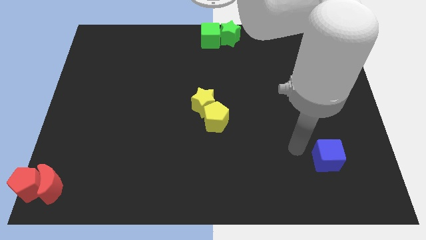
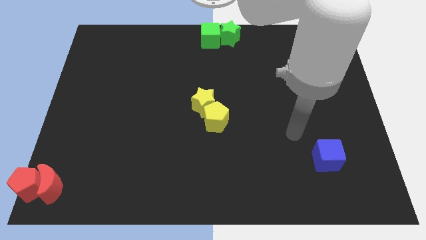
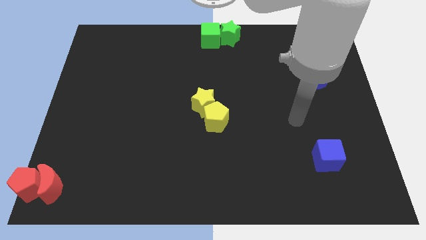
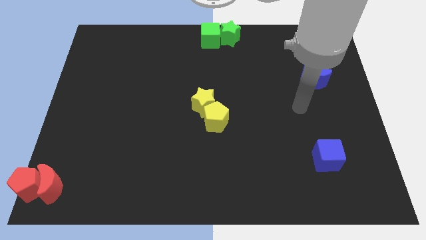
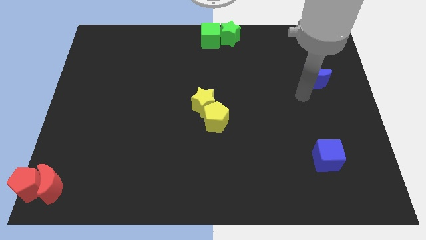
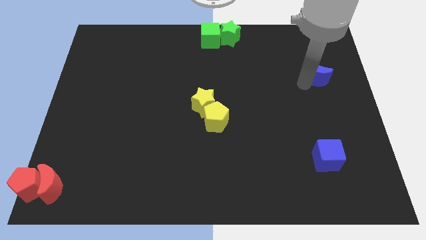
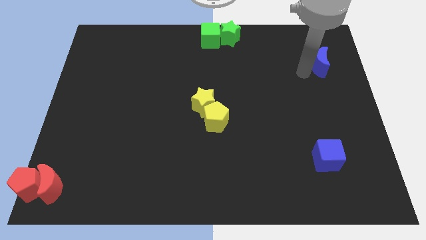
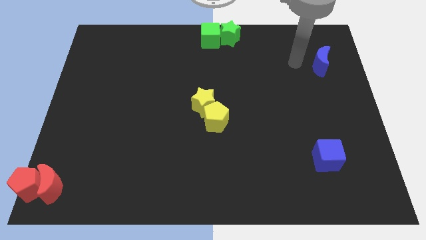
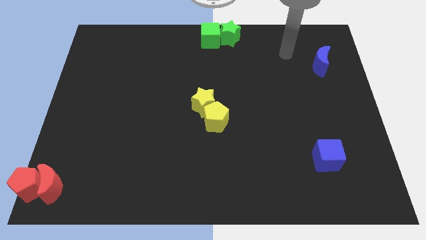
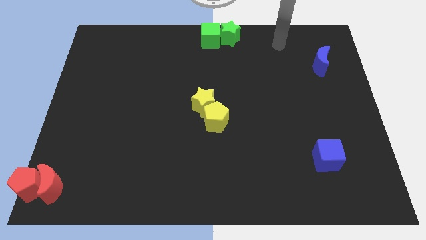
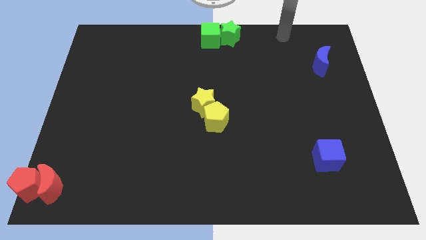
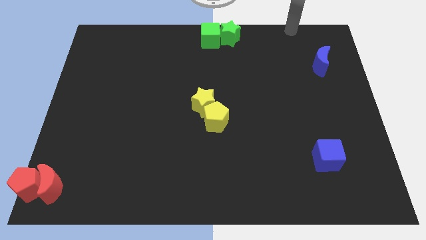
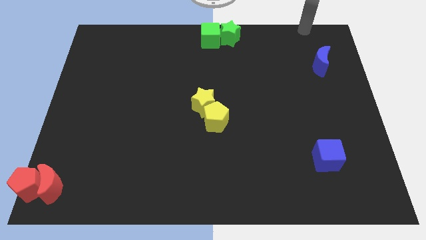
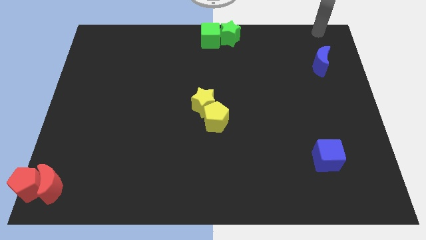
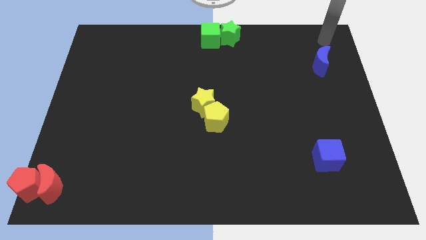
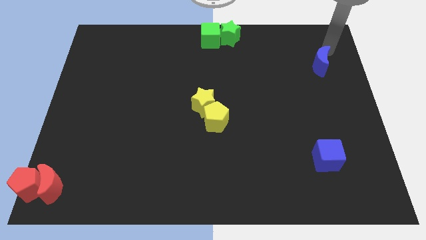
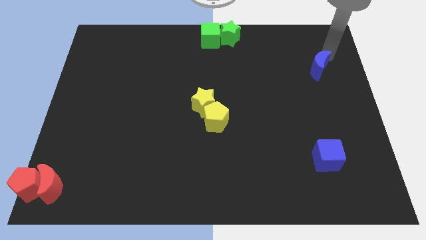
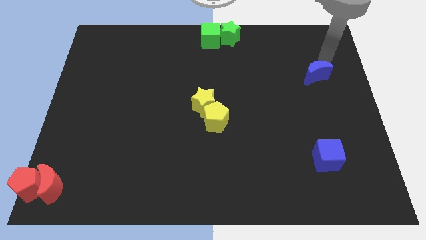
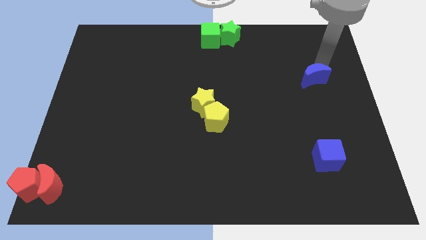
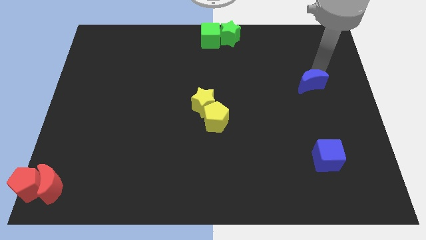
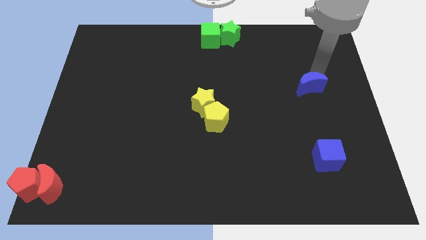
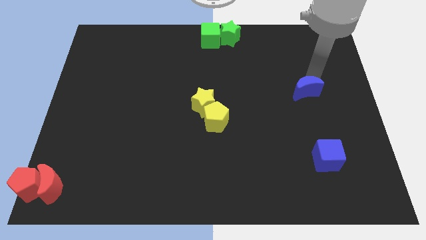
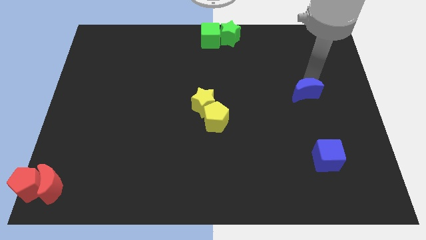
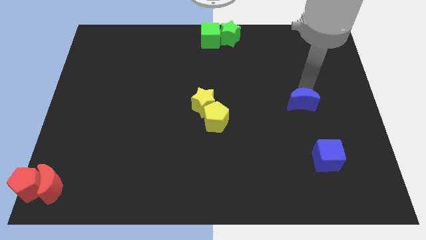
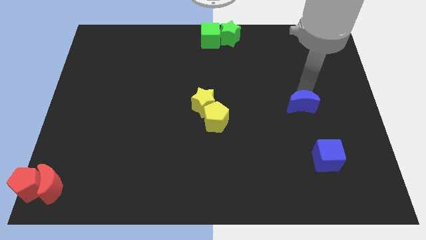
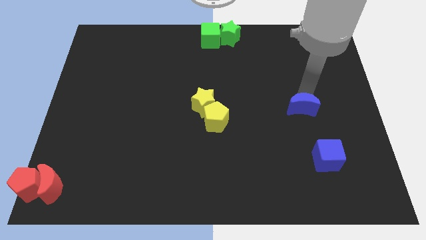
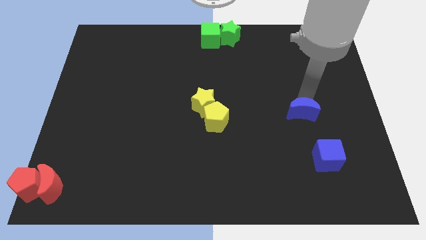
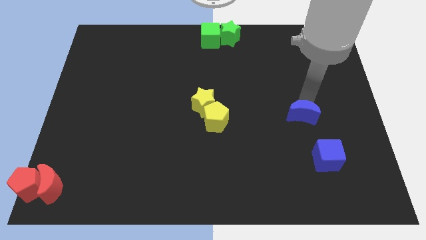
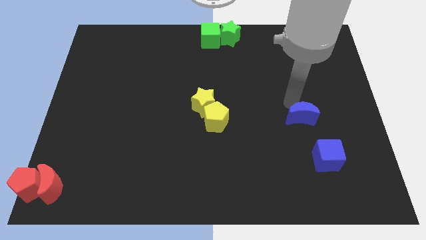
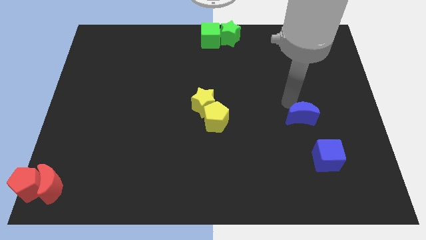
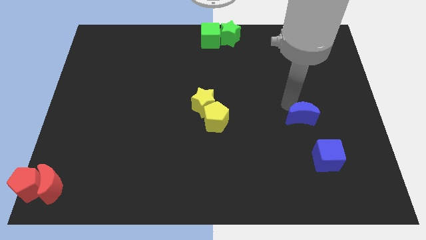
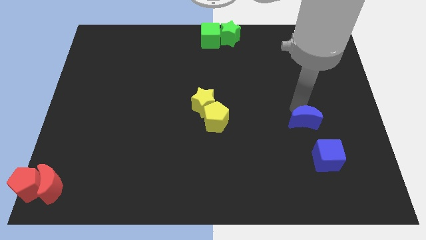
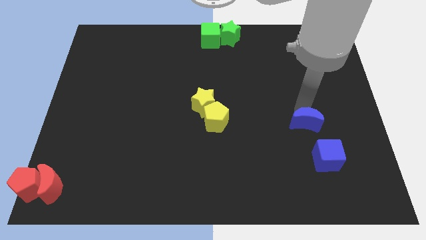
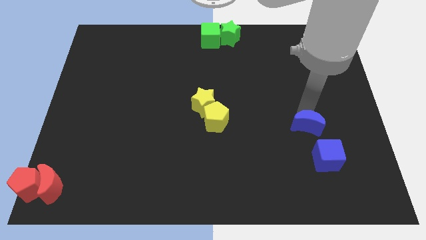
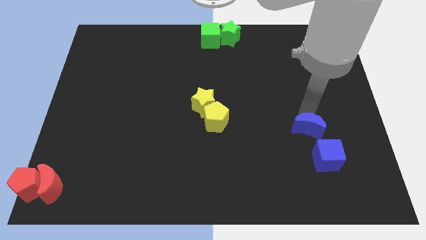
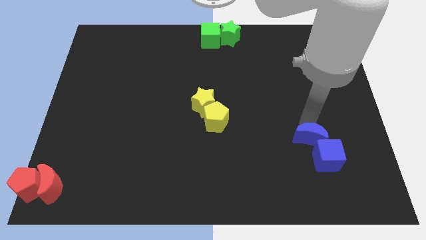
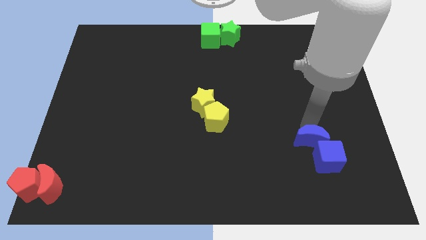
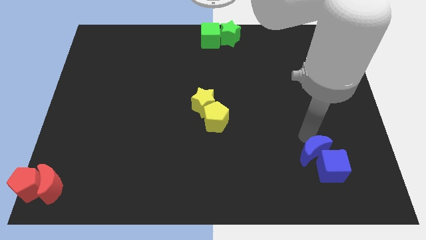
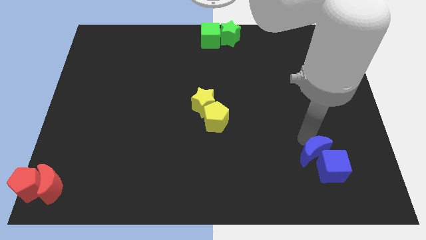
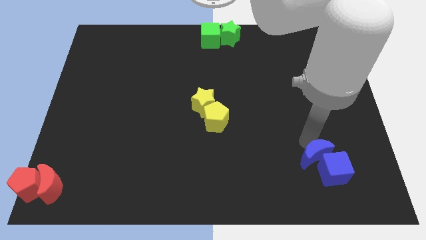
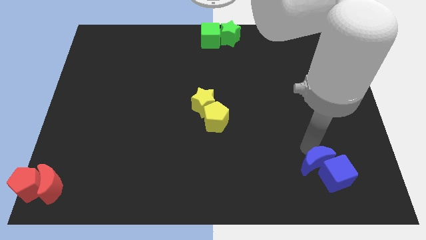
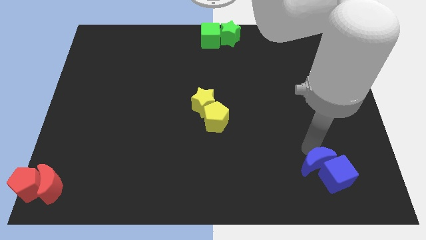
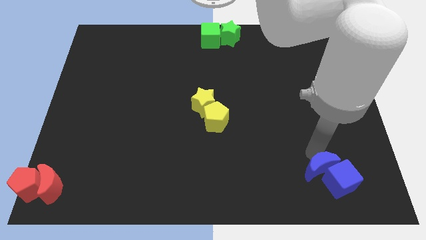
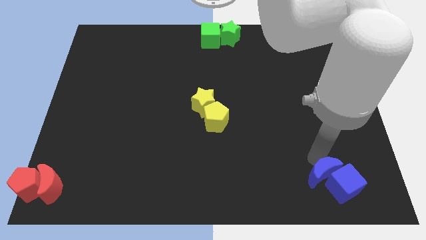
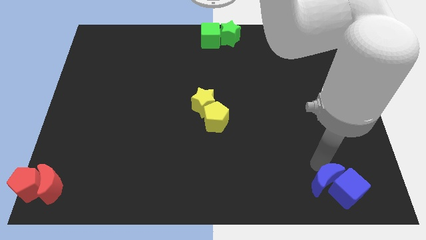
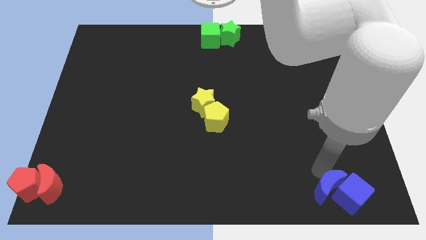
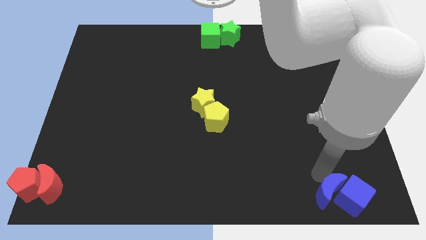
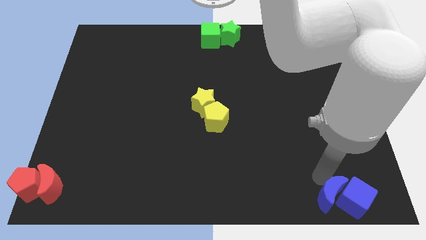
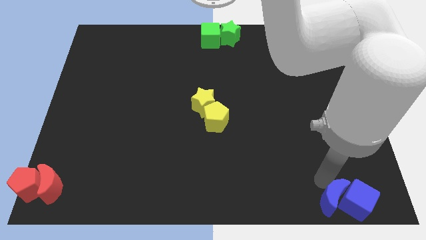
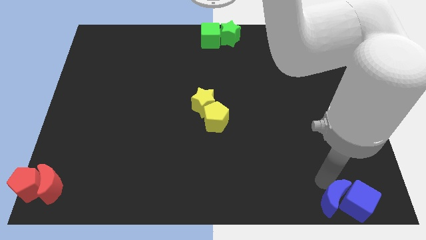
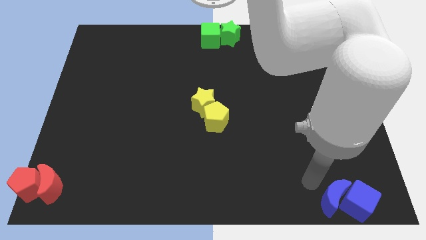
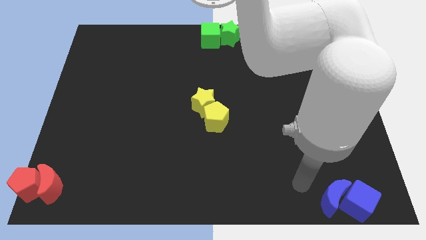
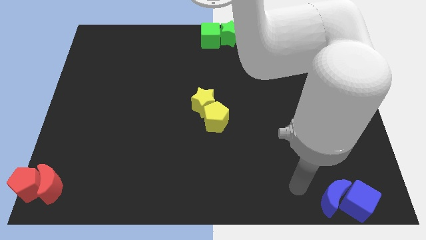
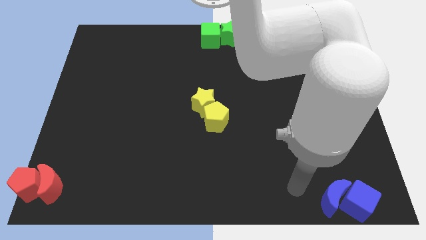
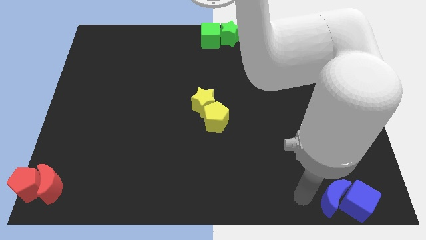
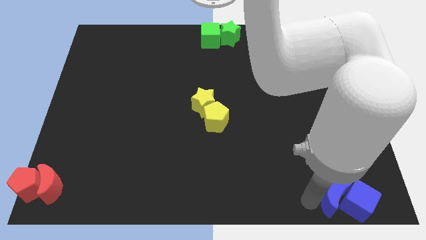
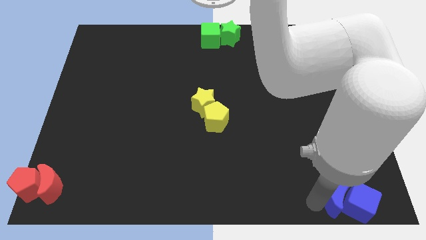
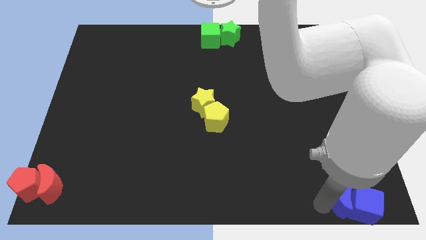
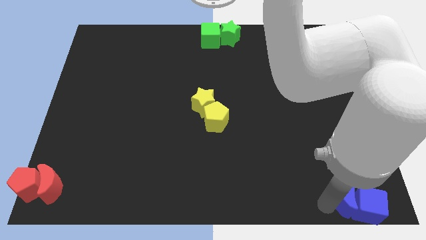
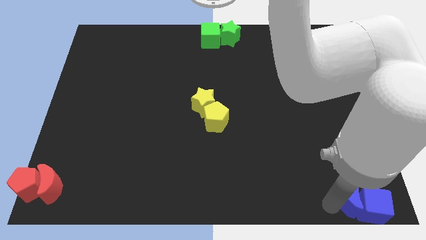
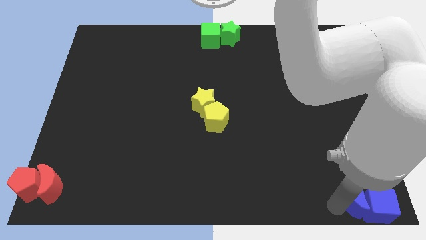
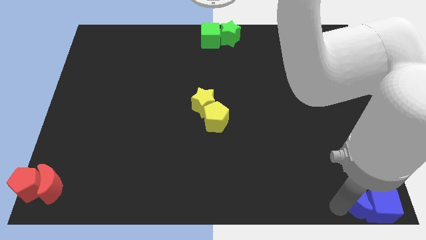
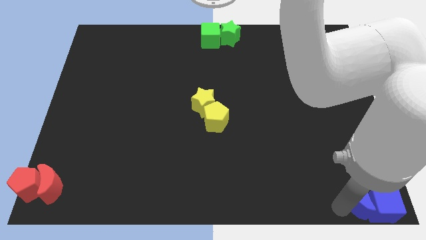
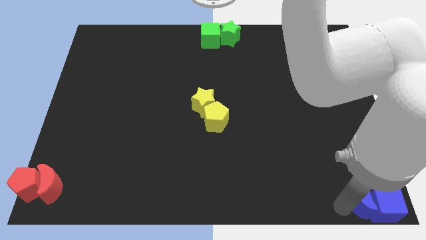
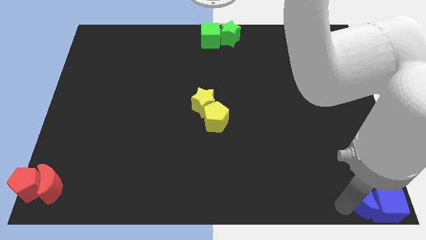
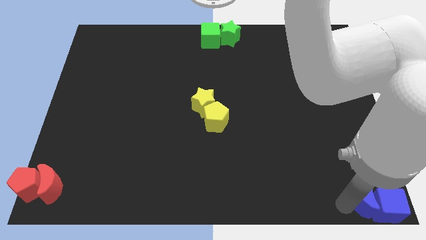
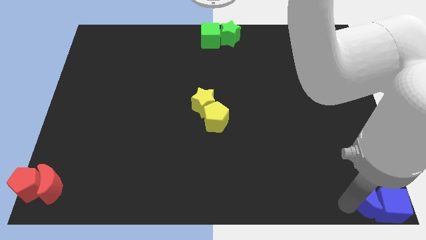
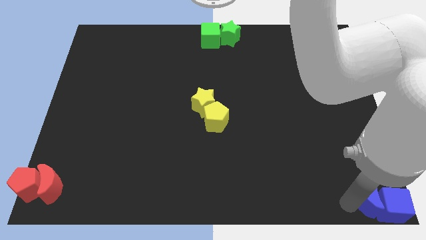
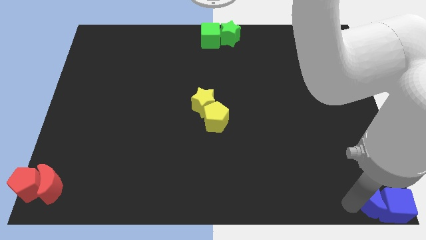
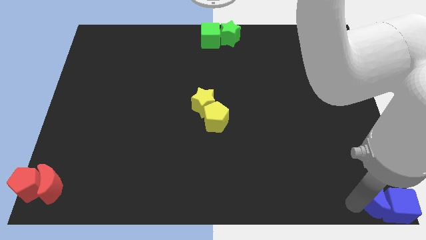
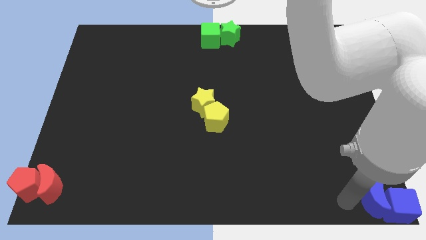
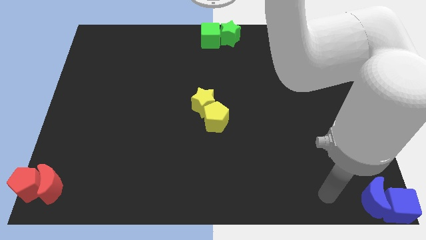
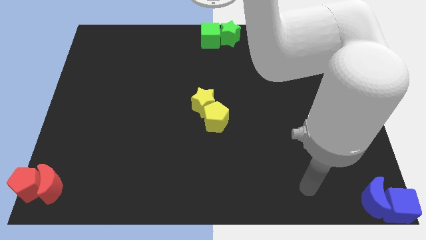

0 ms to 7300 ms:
push the blue moon to the bottom right corner

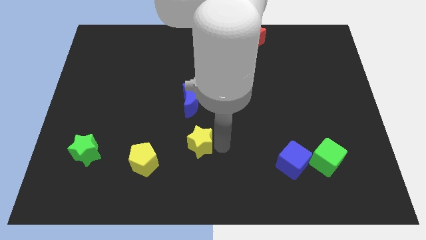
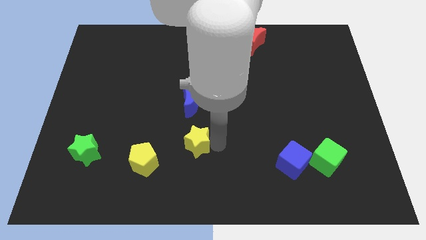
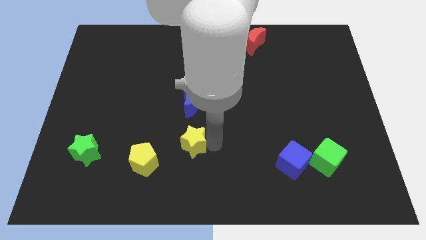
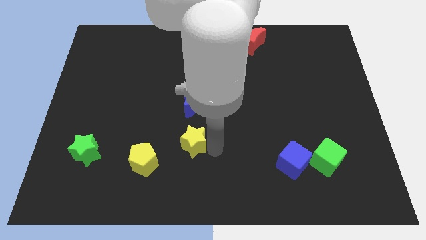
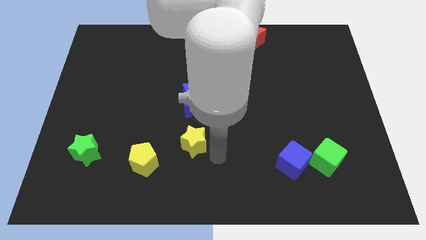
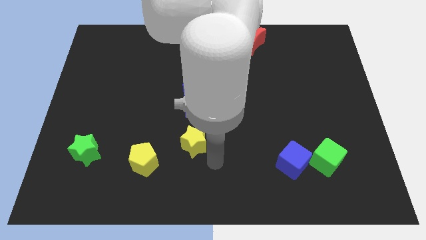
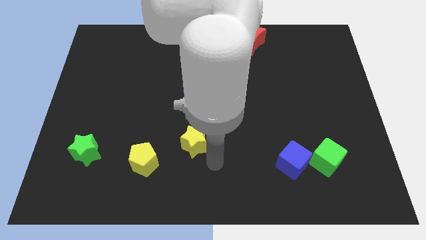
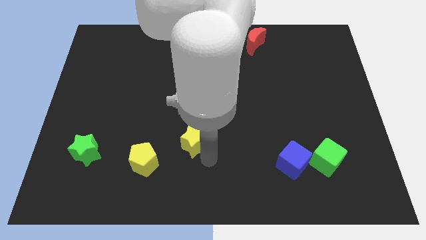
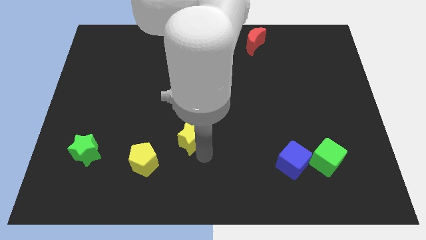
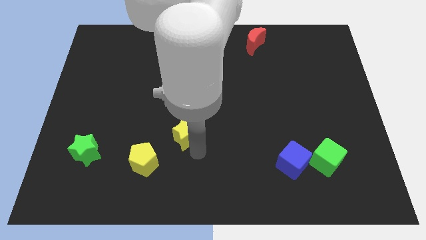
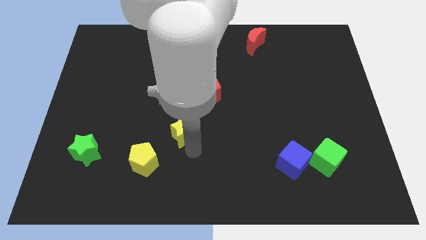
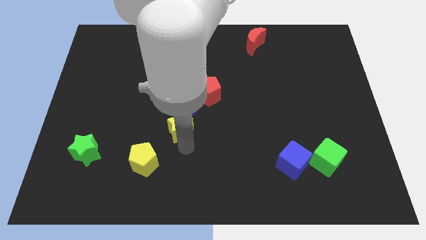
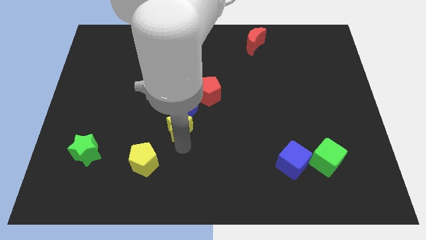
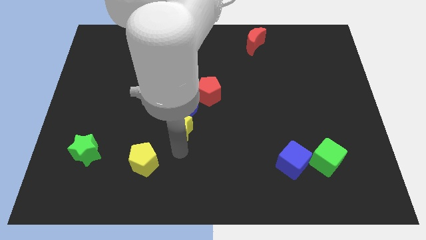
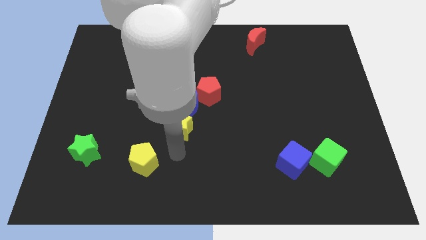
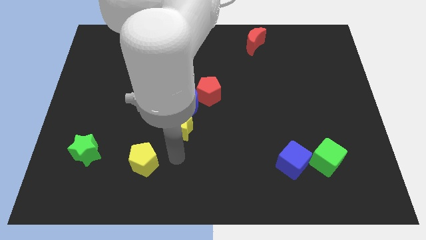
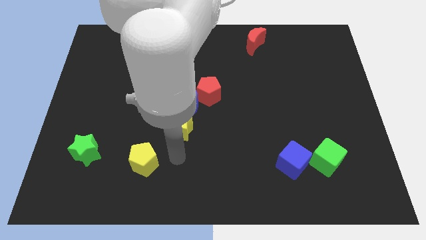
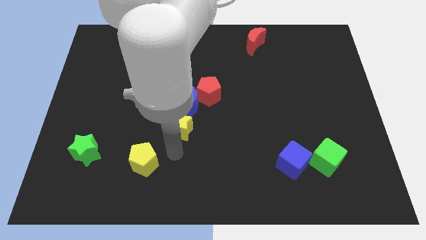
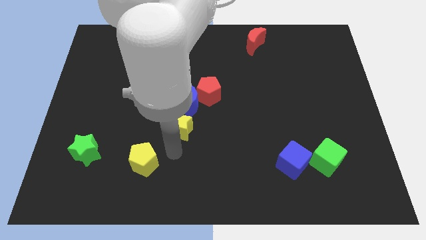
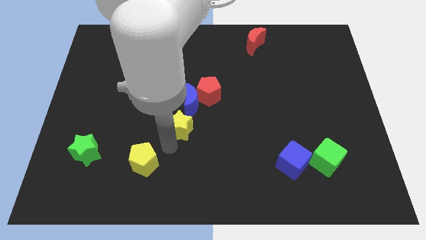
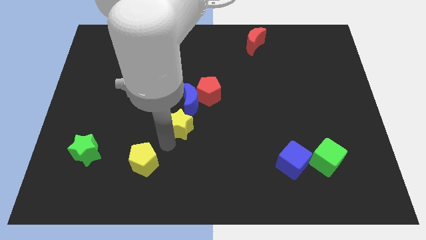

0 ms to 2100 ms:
move the yellow star to the bottom of the blue crescent
